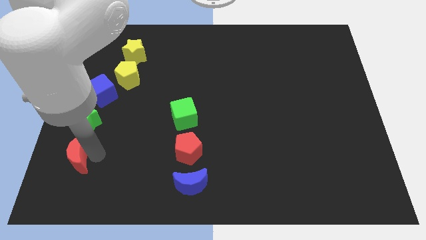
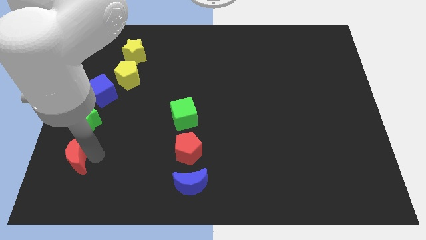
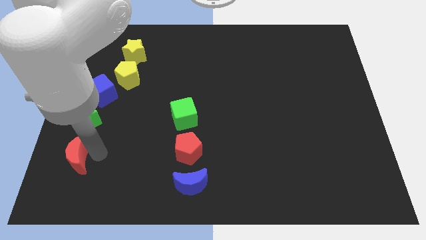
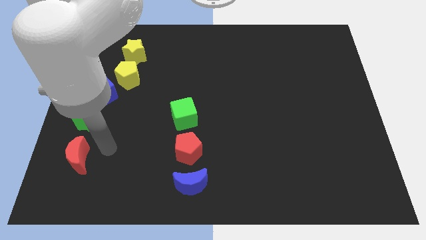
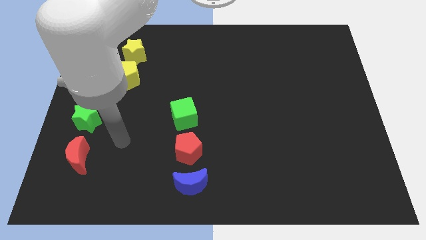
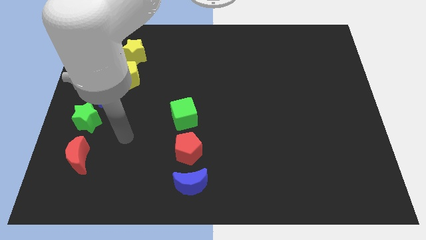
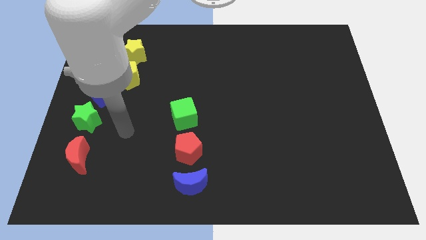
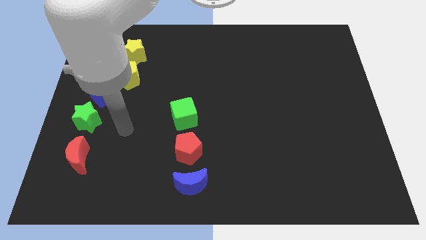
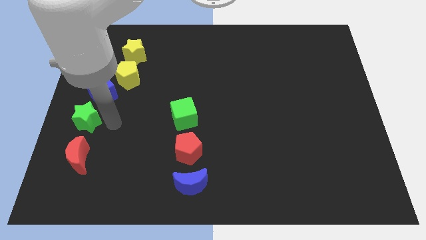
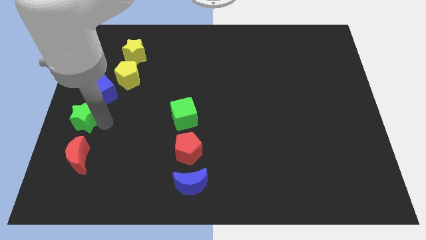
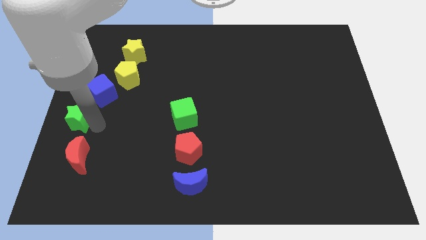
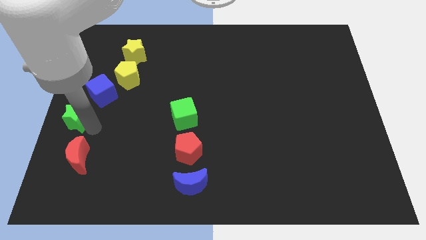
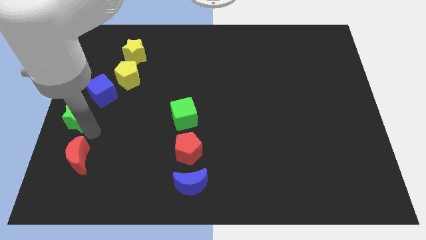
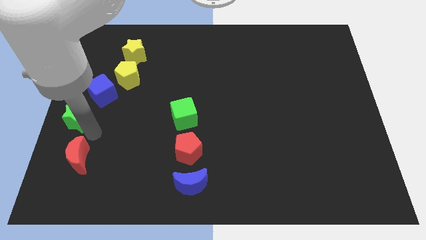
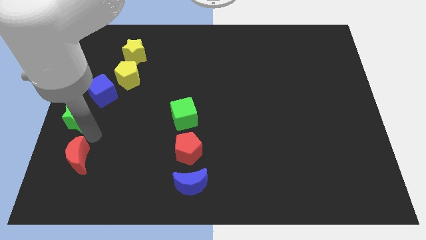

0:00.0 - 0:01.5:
move your arm away from the red moon

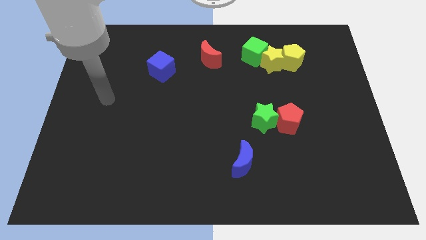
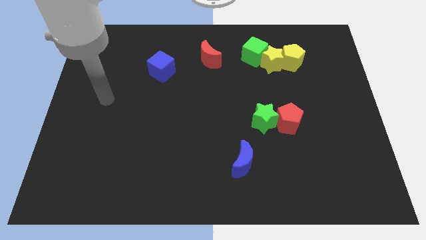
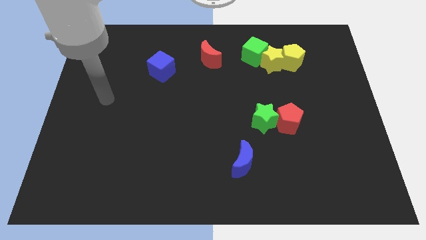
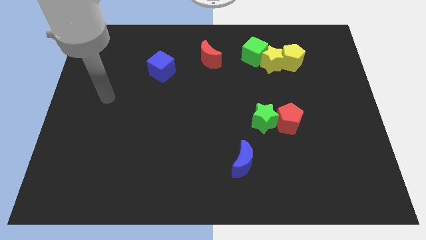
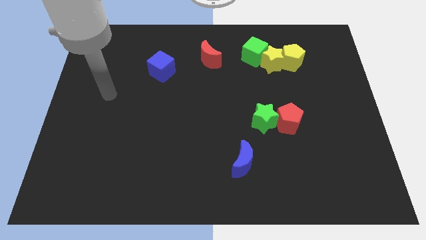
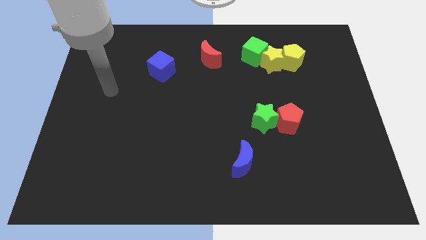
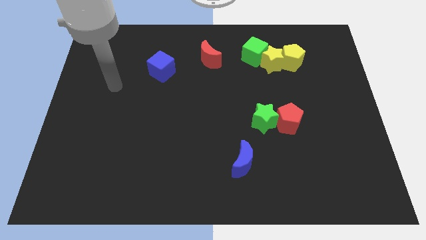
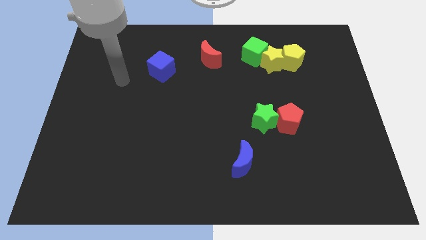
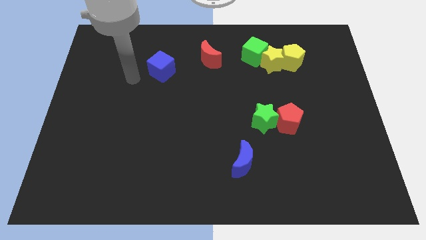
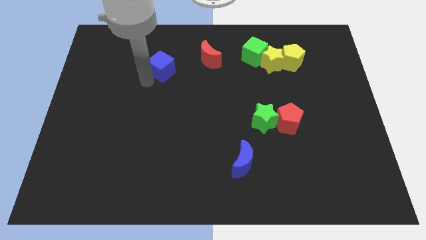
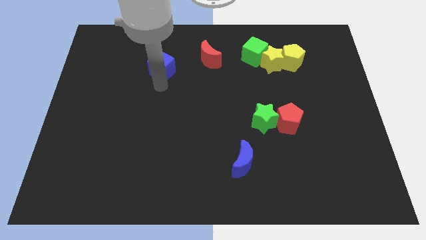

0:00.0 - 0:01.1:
point your arm at the bottom of the blue cube

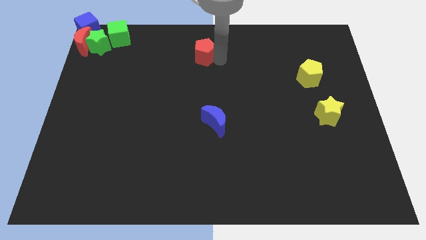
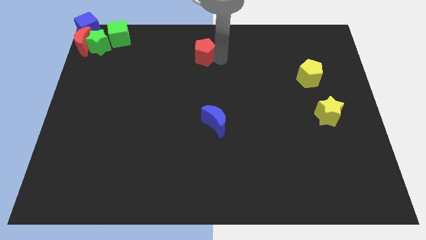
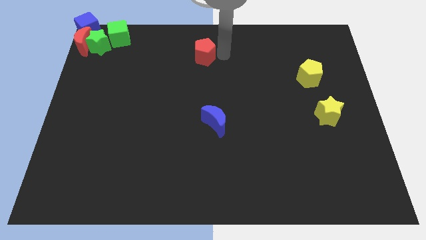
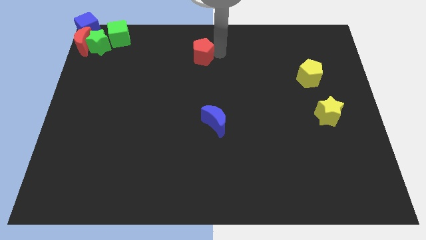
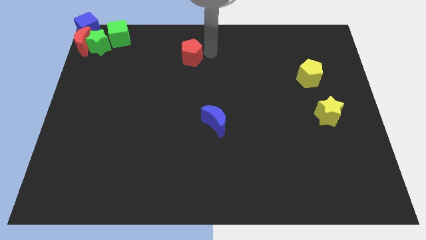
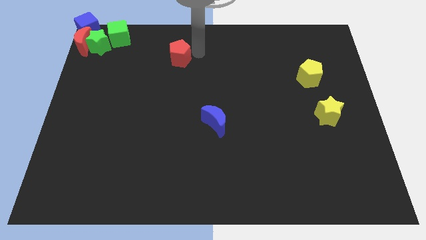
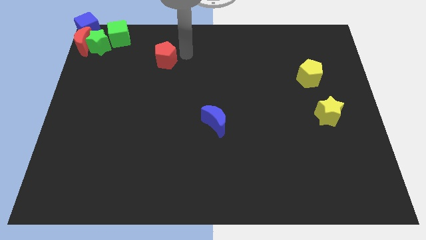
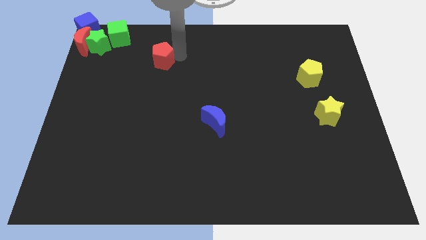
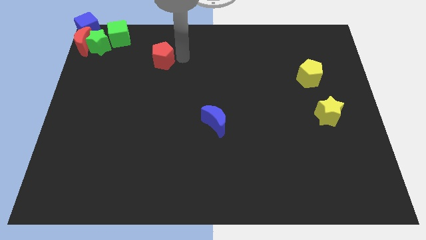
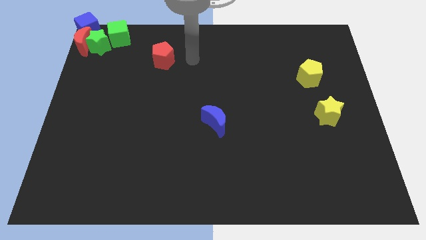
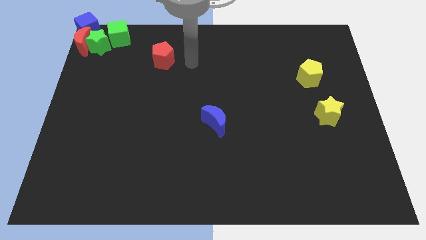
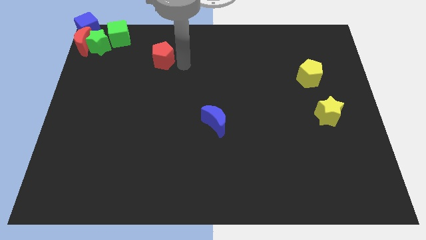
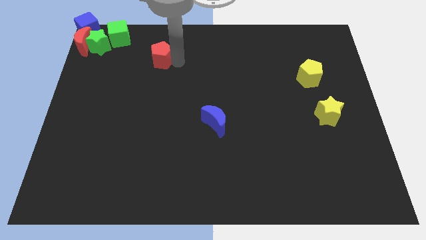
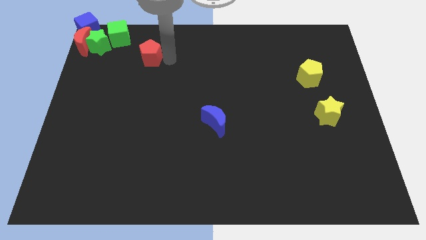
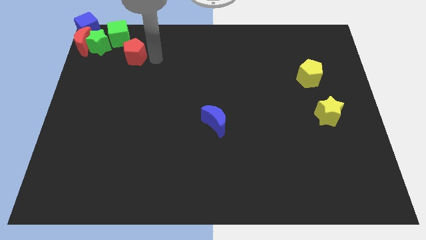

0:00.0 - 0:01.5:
slide the red pentagon diagonal top left to blue moon

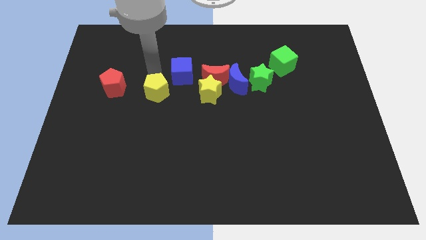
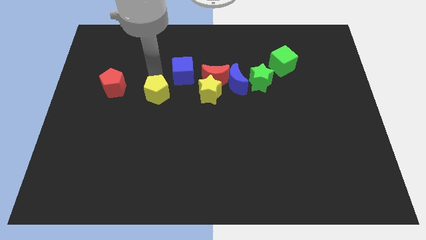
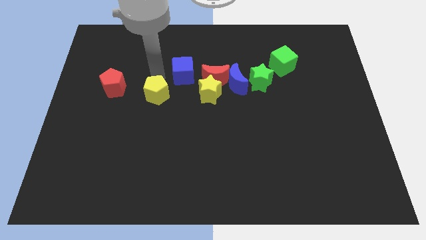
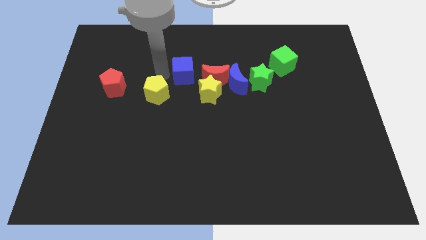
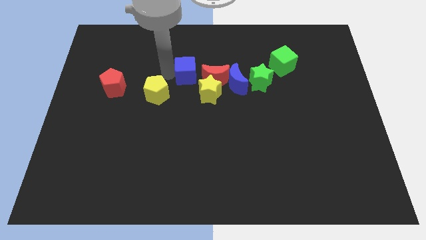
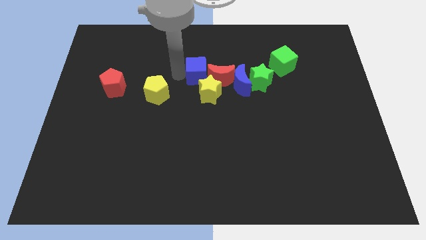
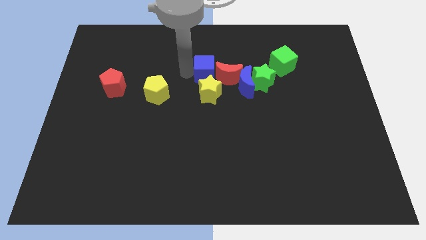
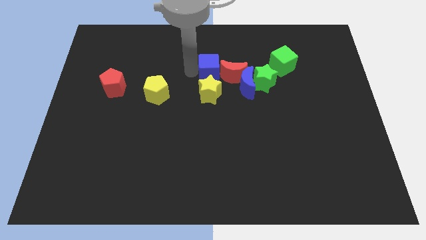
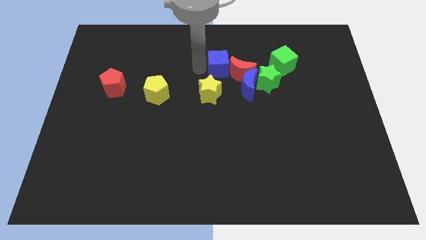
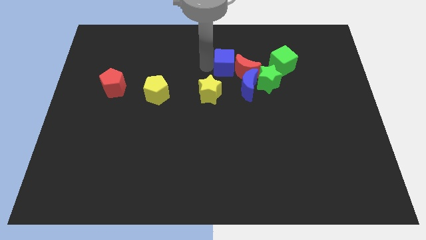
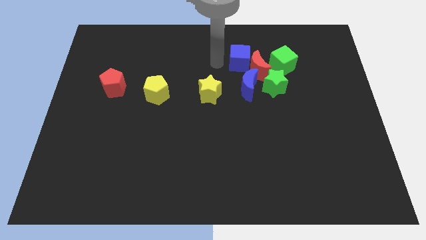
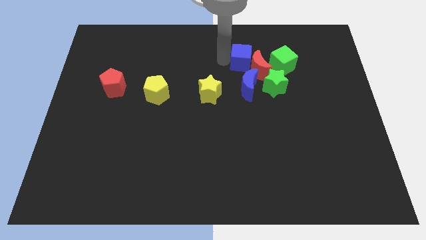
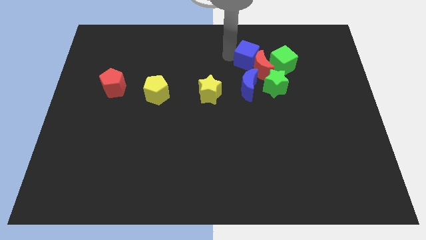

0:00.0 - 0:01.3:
slightly push the blue cube into the red moon

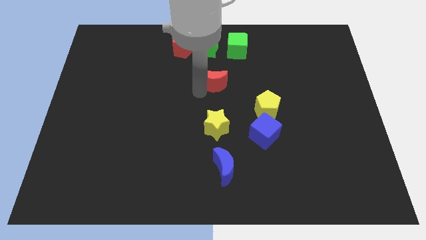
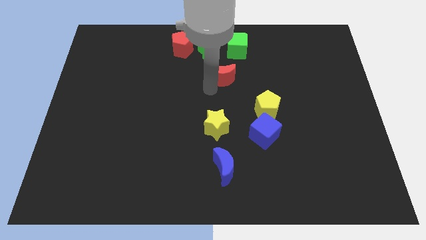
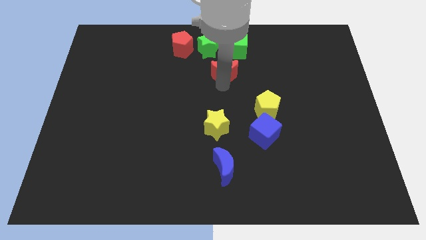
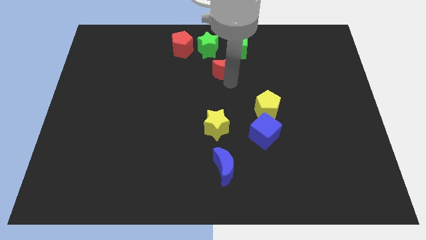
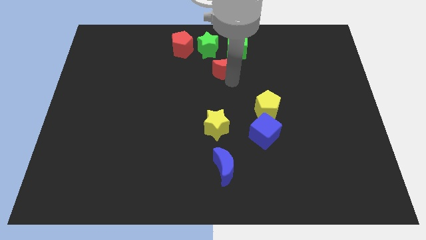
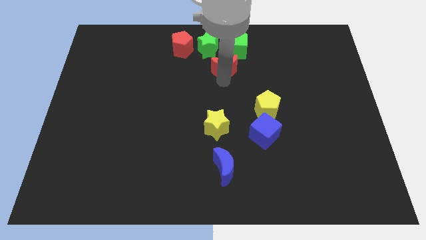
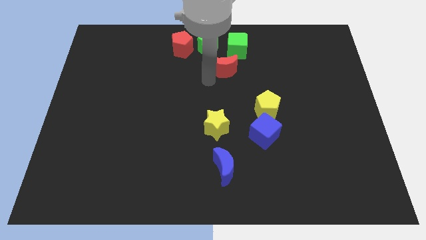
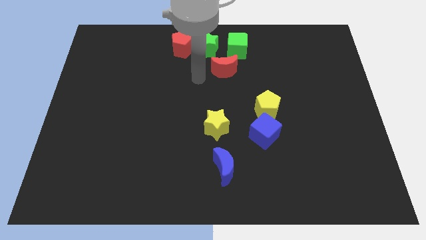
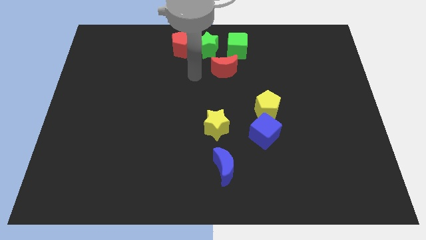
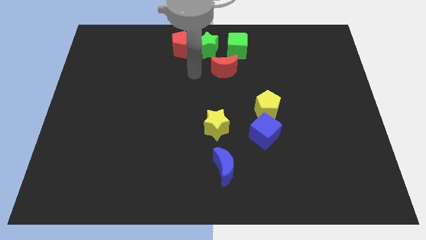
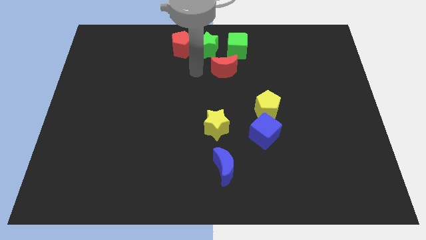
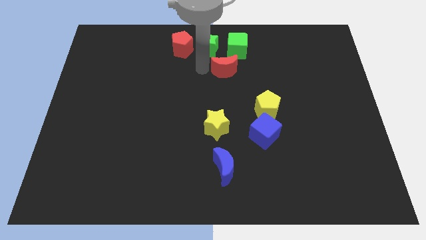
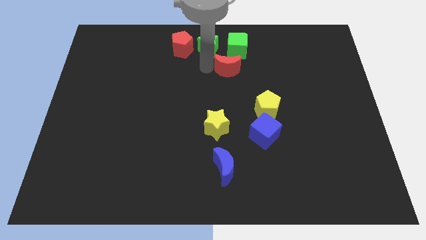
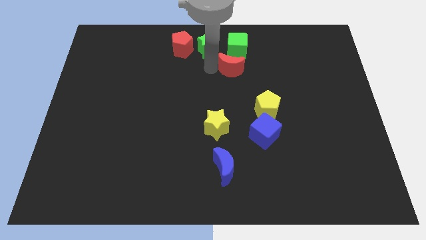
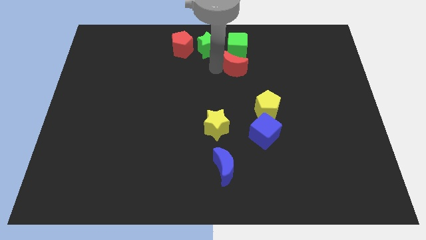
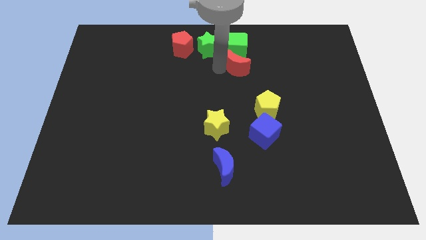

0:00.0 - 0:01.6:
place the red crescent below the green cube

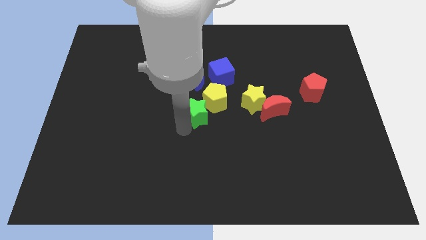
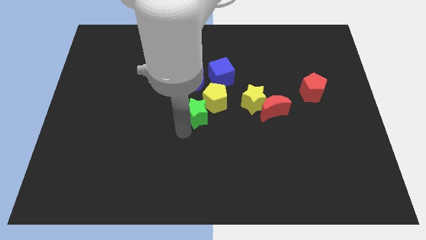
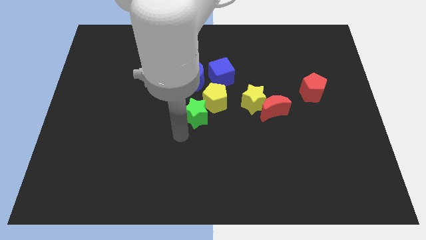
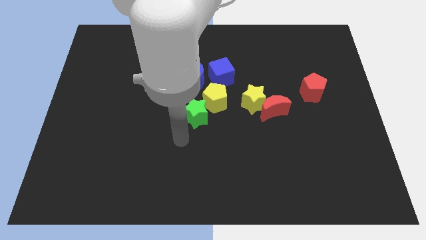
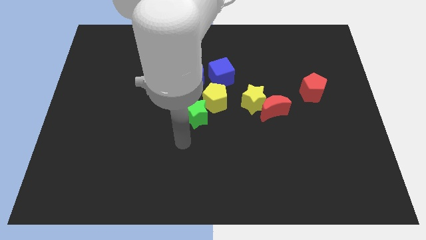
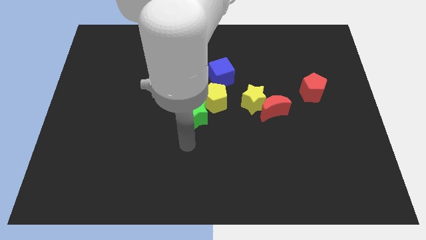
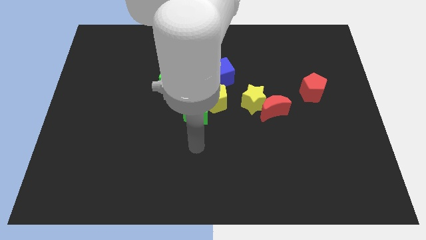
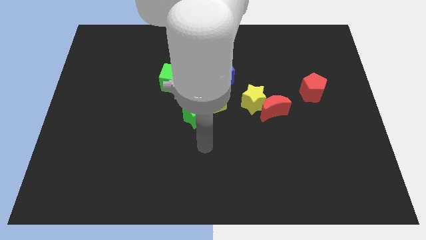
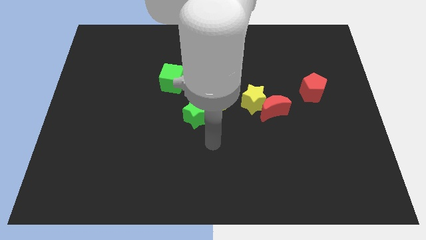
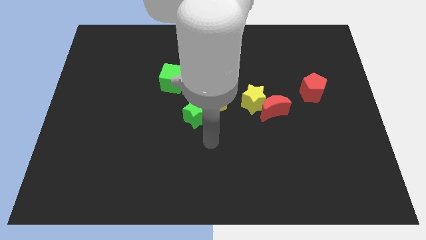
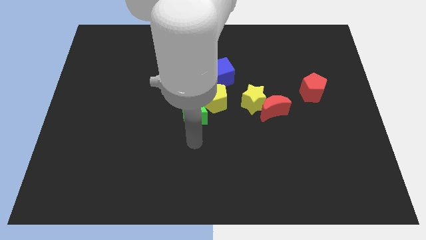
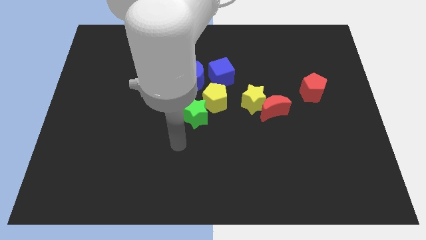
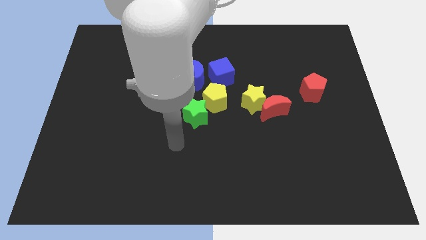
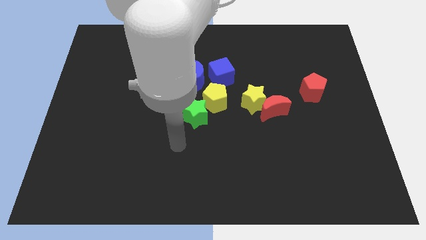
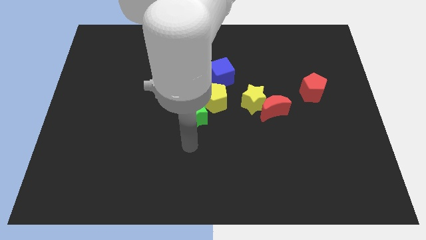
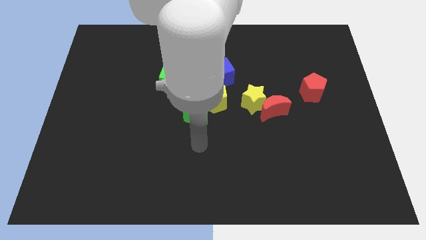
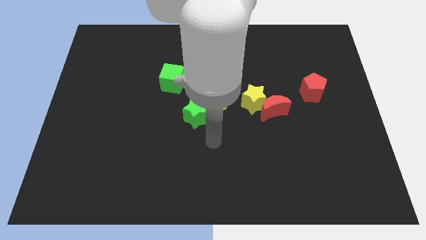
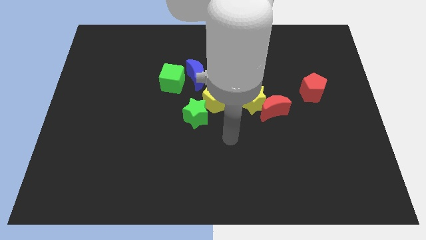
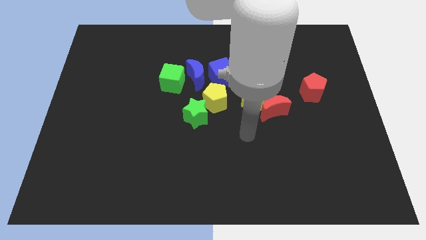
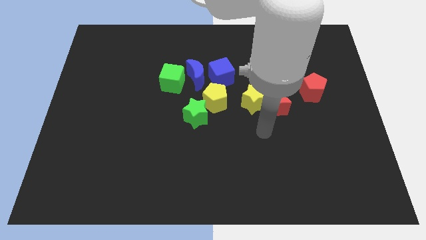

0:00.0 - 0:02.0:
move your arm away from the green star
